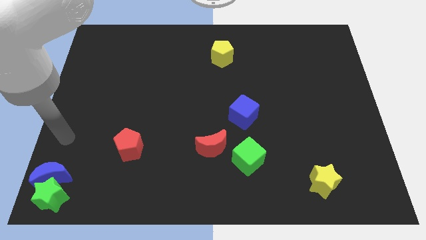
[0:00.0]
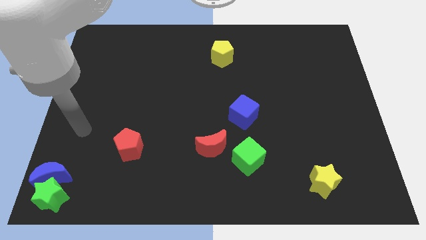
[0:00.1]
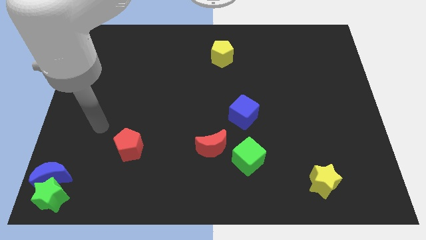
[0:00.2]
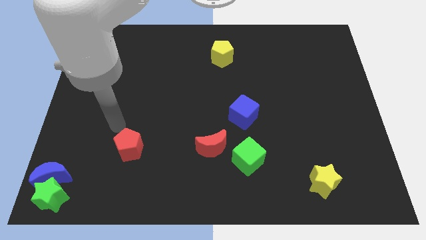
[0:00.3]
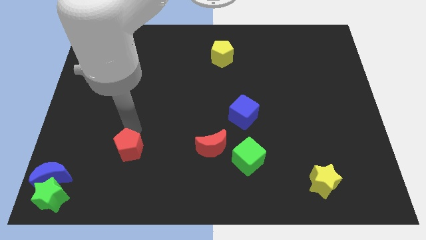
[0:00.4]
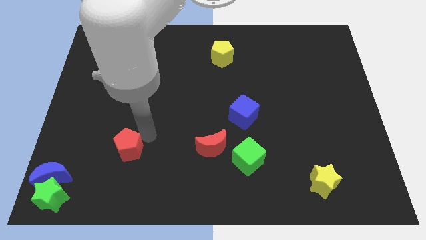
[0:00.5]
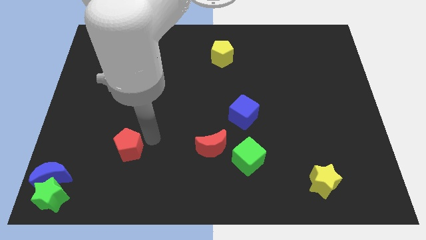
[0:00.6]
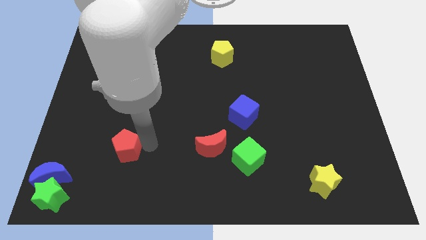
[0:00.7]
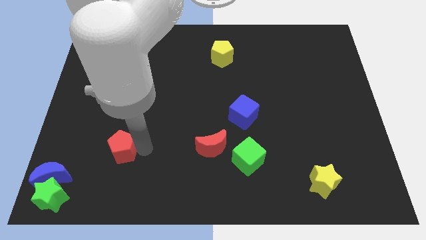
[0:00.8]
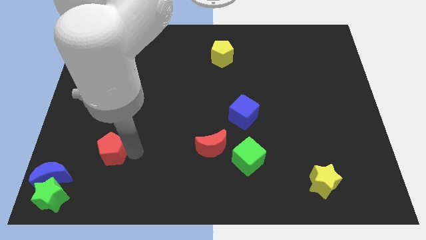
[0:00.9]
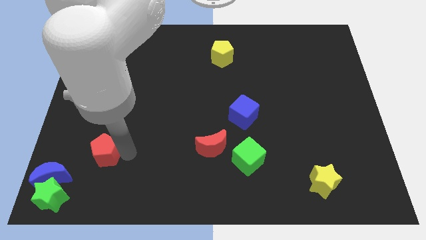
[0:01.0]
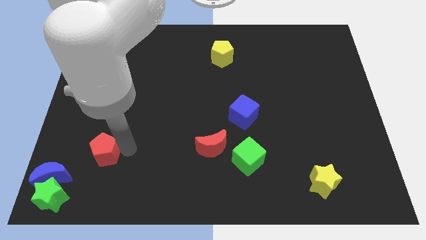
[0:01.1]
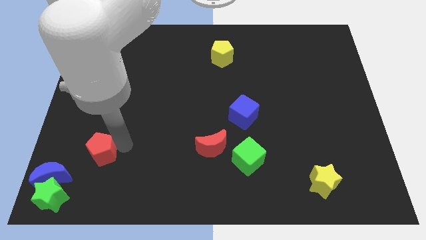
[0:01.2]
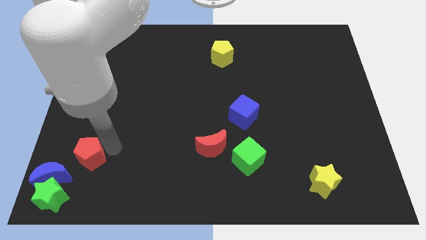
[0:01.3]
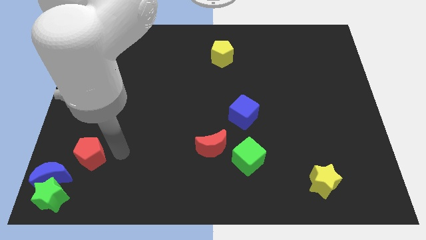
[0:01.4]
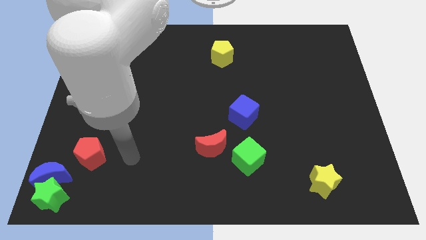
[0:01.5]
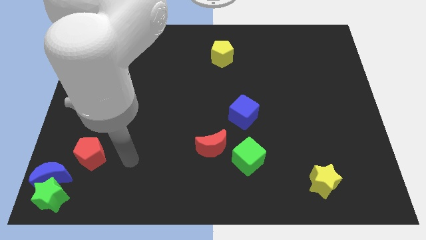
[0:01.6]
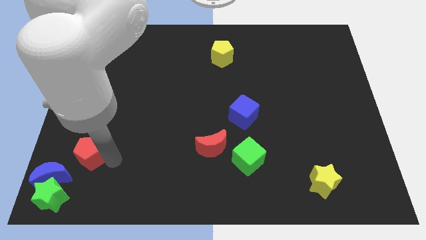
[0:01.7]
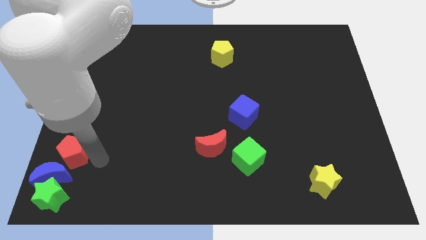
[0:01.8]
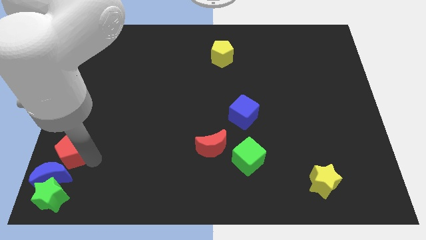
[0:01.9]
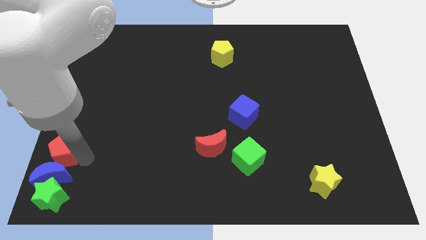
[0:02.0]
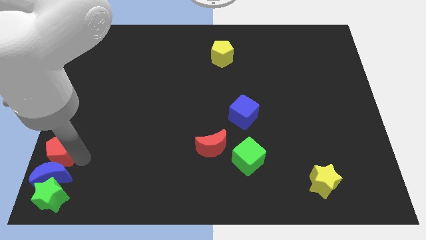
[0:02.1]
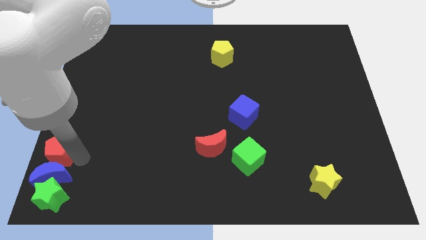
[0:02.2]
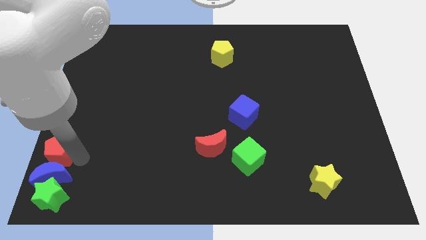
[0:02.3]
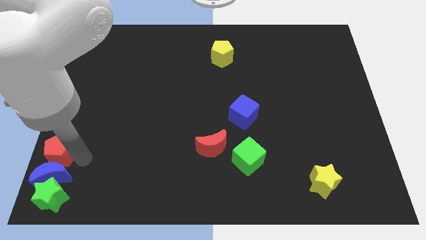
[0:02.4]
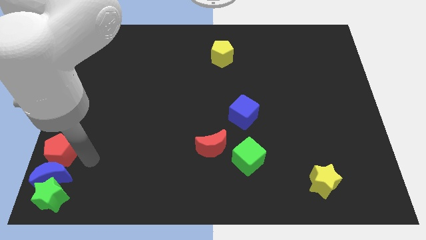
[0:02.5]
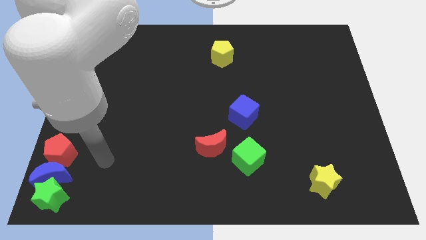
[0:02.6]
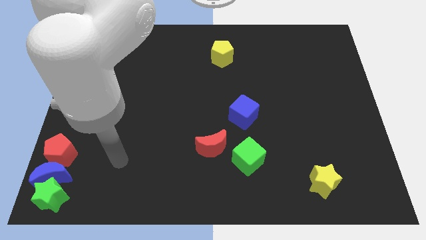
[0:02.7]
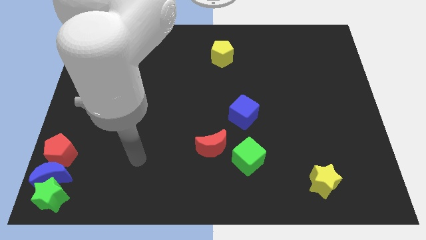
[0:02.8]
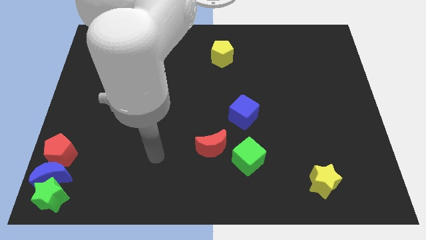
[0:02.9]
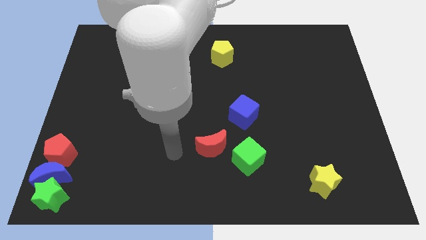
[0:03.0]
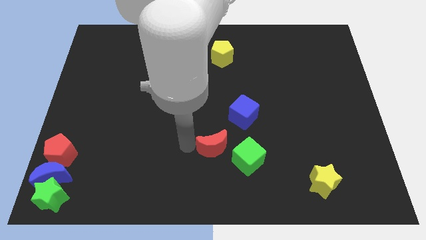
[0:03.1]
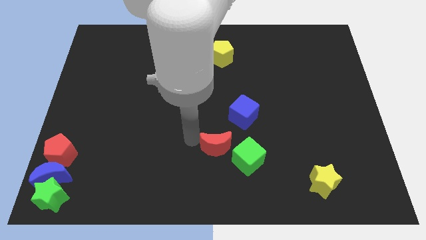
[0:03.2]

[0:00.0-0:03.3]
place red pentagon above blue moon

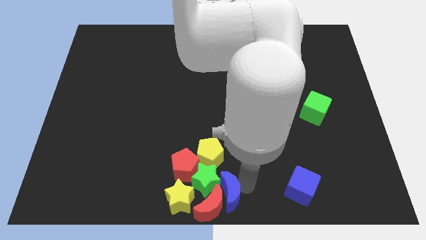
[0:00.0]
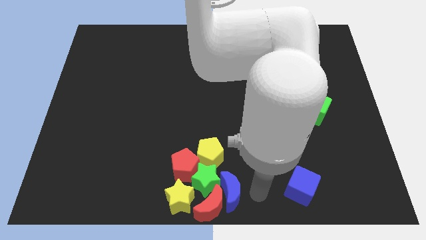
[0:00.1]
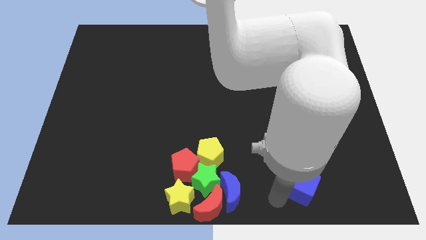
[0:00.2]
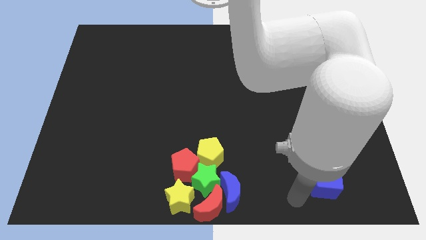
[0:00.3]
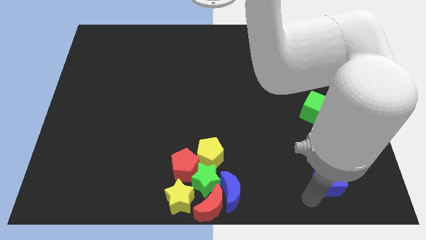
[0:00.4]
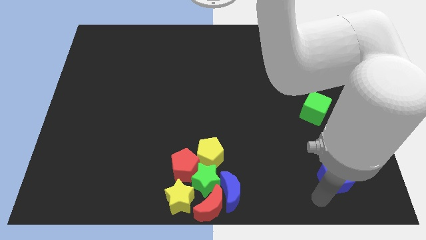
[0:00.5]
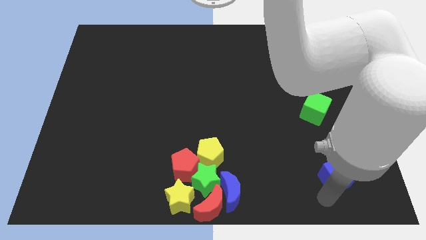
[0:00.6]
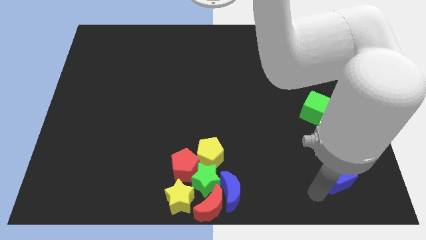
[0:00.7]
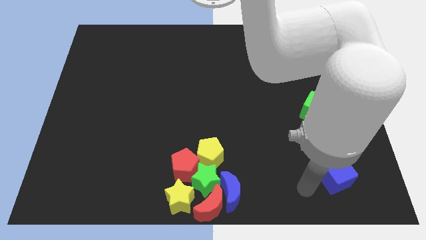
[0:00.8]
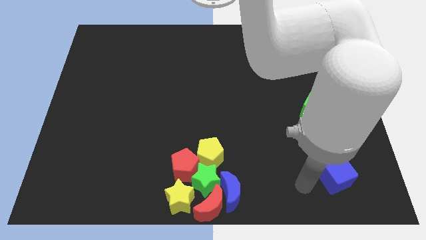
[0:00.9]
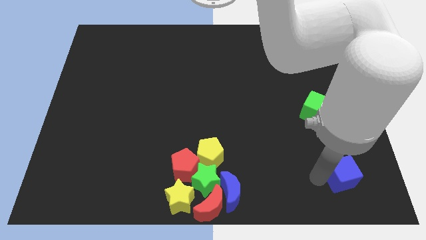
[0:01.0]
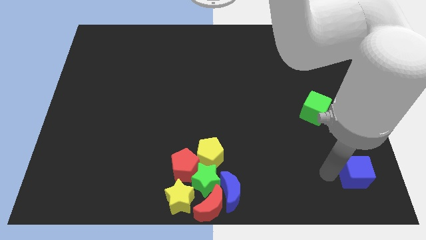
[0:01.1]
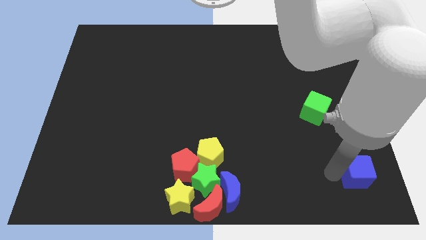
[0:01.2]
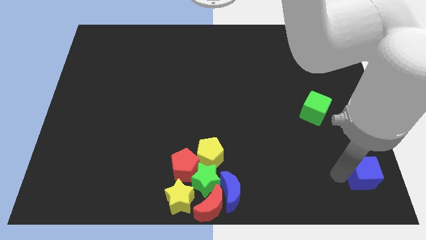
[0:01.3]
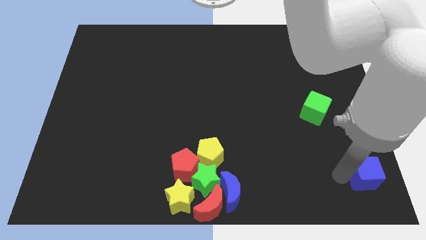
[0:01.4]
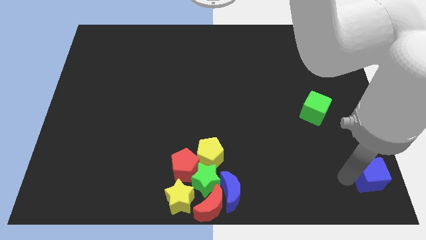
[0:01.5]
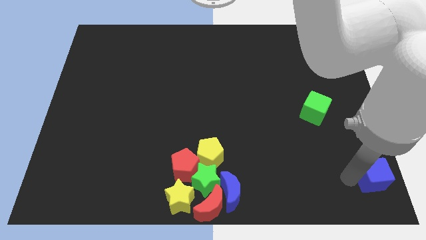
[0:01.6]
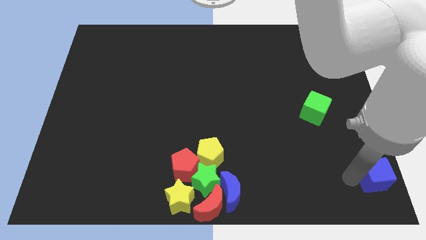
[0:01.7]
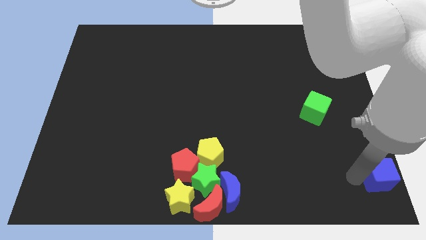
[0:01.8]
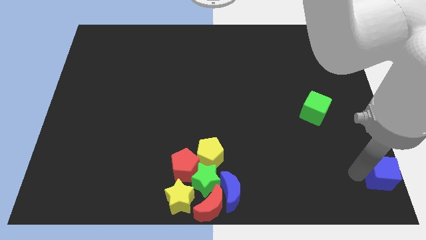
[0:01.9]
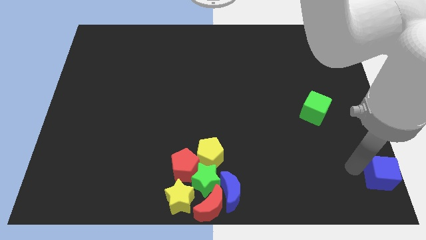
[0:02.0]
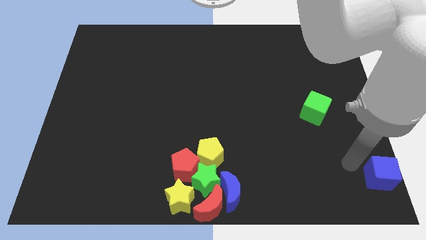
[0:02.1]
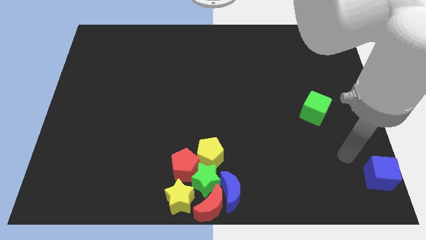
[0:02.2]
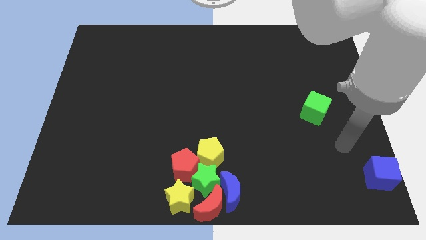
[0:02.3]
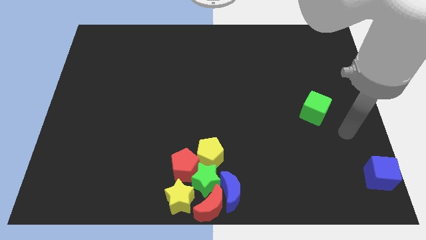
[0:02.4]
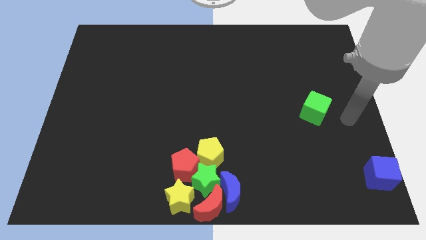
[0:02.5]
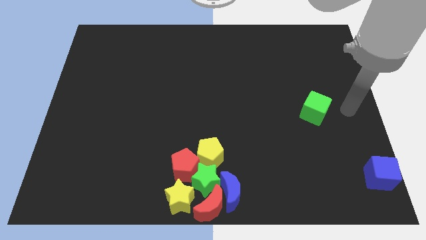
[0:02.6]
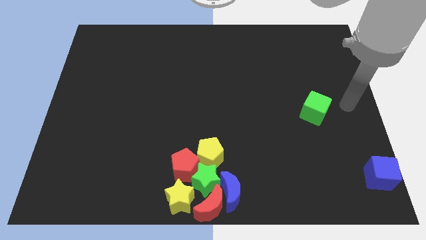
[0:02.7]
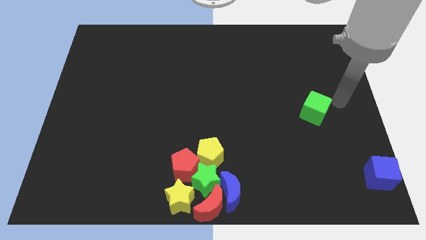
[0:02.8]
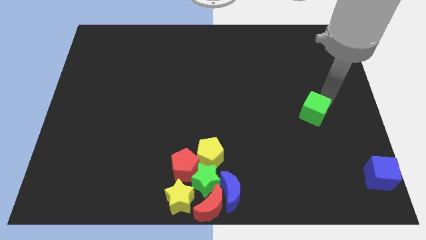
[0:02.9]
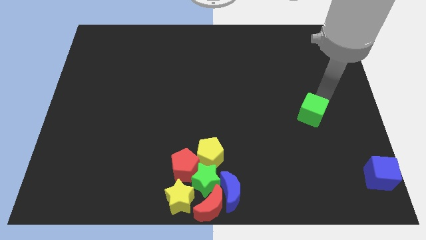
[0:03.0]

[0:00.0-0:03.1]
drag the blue cube to the bottom right of the board

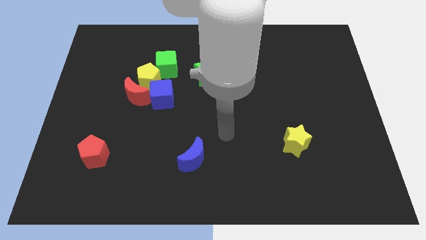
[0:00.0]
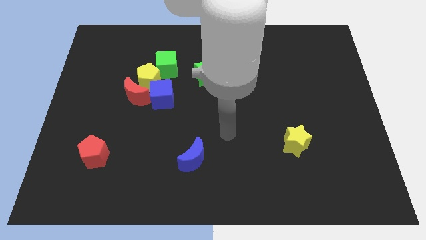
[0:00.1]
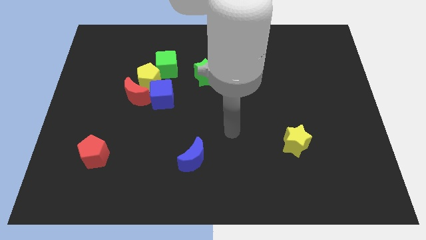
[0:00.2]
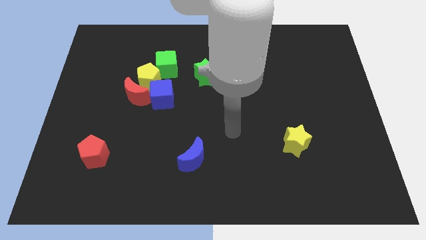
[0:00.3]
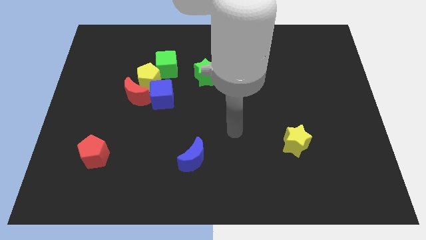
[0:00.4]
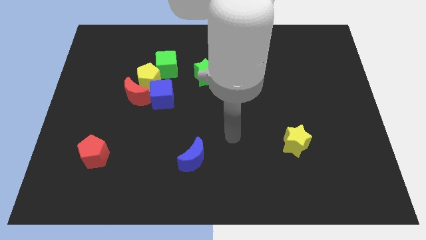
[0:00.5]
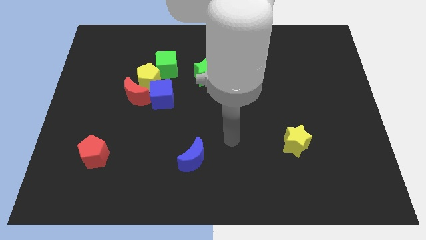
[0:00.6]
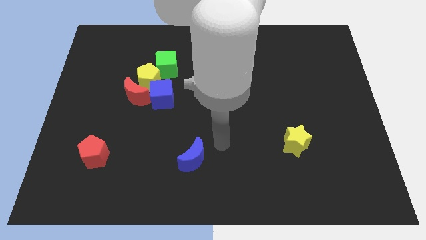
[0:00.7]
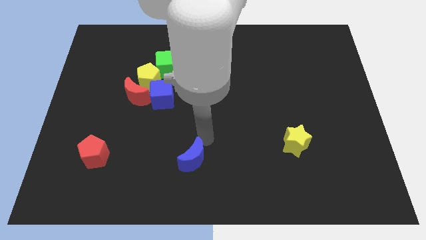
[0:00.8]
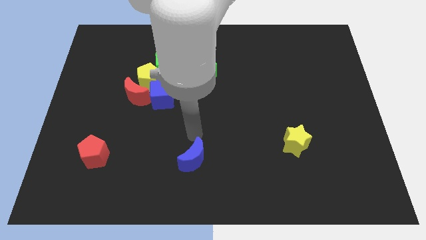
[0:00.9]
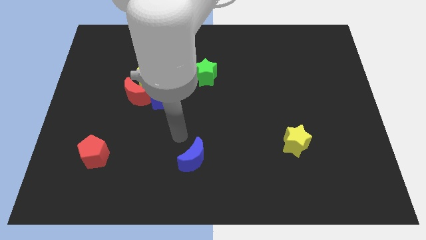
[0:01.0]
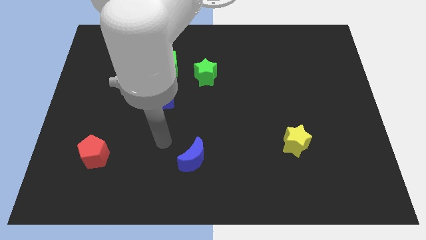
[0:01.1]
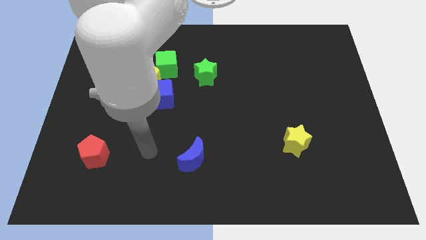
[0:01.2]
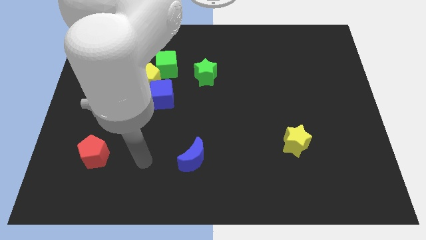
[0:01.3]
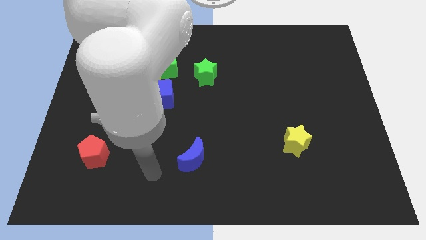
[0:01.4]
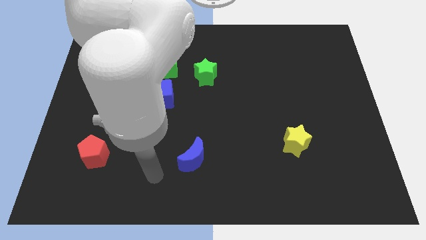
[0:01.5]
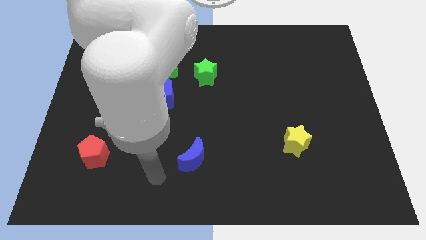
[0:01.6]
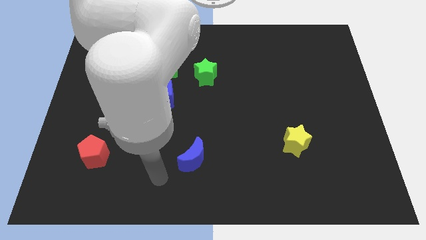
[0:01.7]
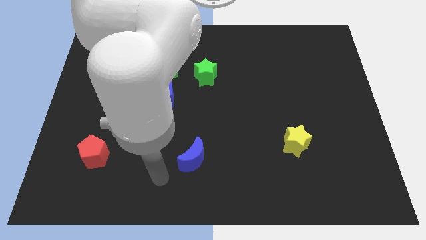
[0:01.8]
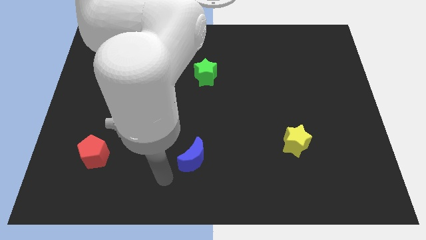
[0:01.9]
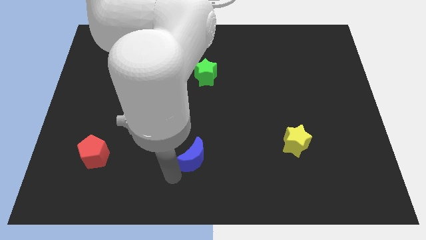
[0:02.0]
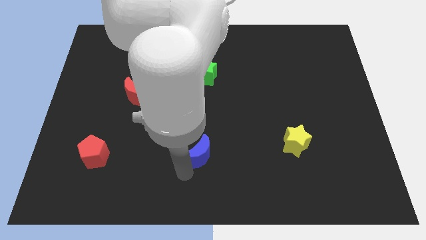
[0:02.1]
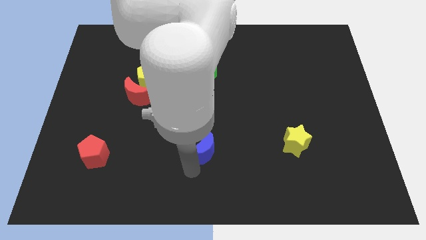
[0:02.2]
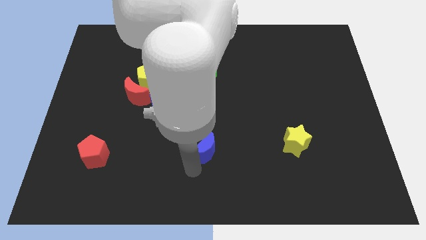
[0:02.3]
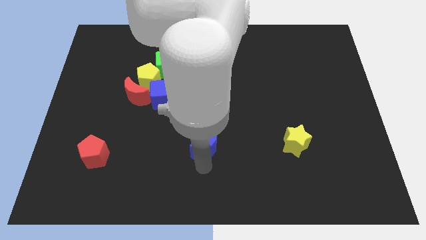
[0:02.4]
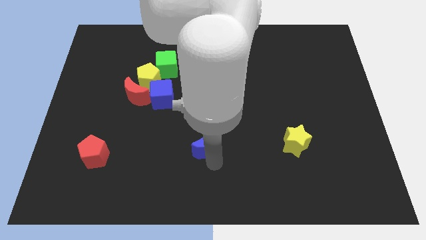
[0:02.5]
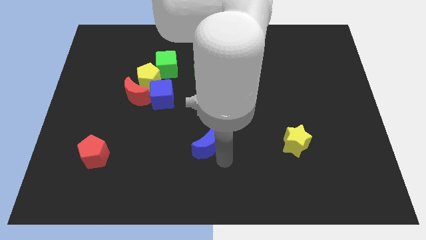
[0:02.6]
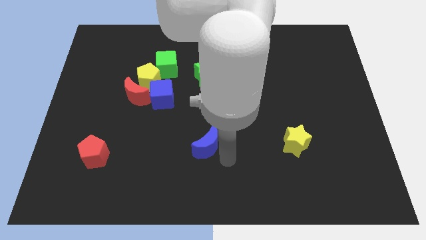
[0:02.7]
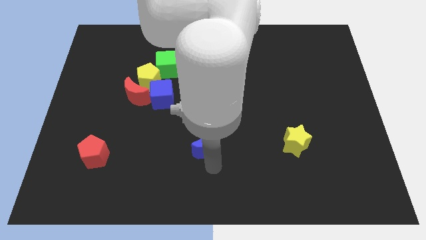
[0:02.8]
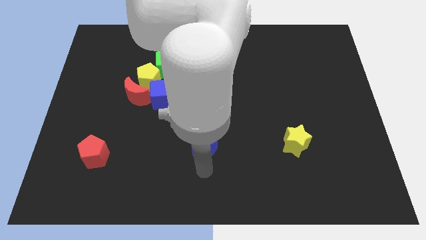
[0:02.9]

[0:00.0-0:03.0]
push the blue crescent towards center of the board
